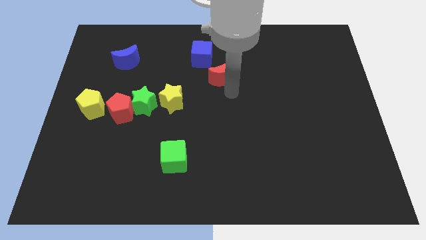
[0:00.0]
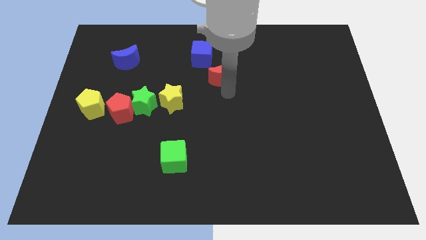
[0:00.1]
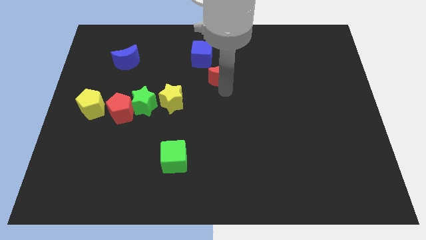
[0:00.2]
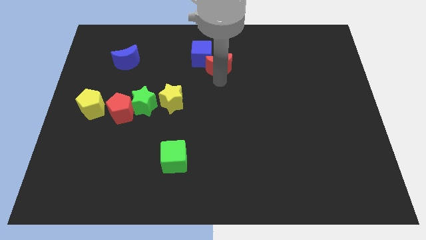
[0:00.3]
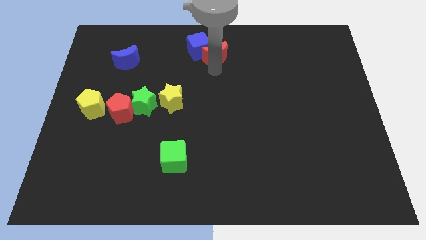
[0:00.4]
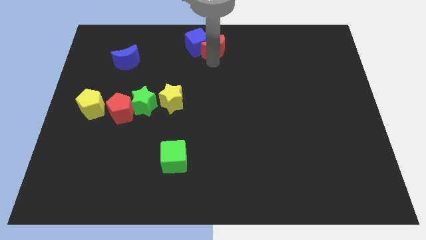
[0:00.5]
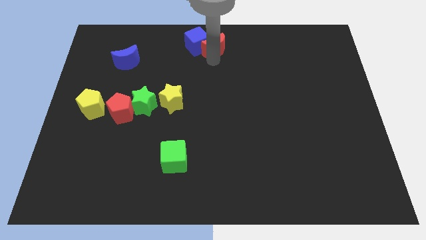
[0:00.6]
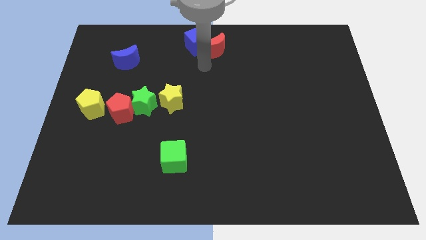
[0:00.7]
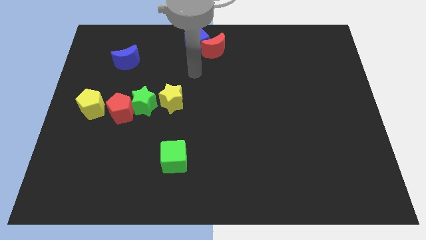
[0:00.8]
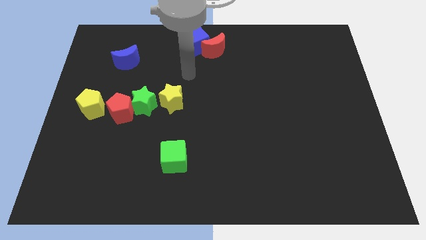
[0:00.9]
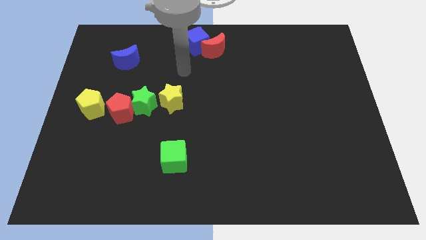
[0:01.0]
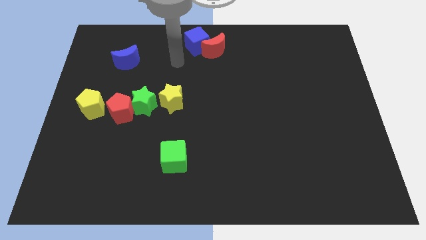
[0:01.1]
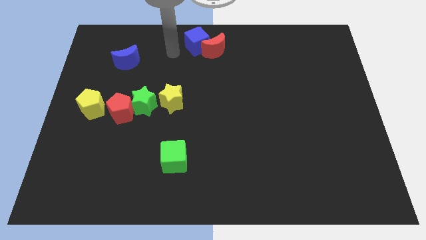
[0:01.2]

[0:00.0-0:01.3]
push red moon in to blue cube

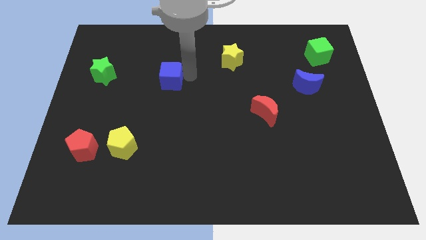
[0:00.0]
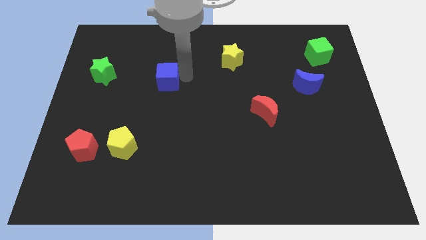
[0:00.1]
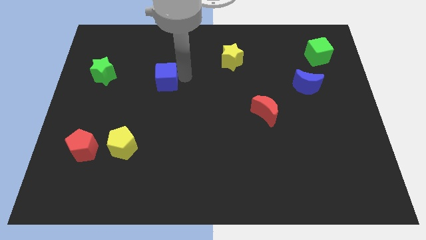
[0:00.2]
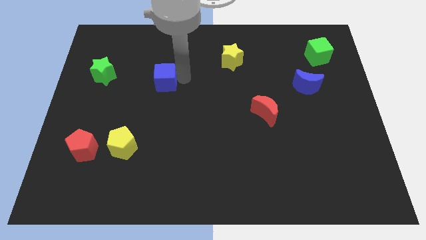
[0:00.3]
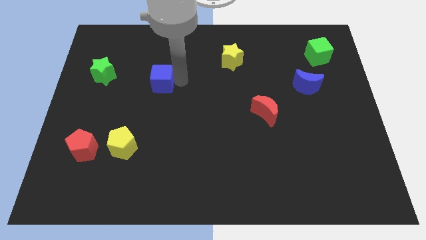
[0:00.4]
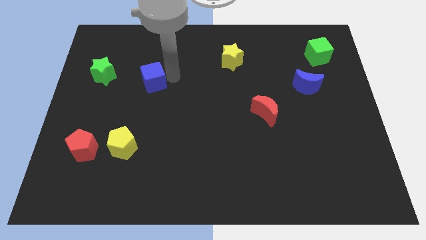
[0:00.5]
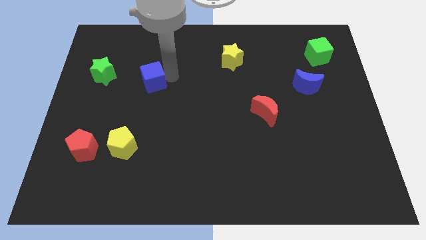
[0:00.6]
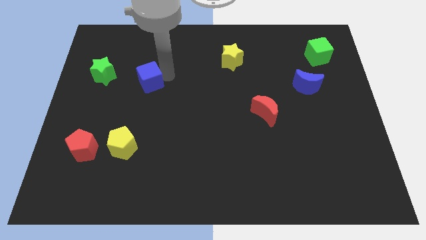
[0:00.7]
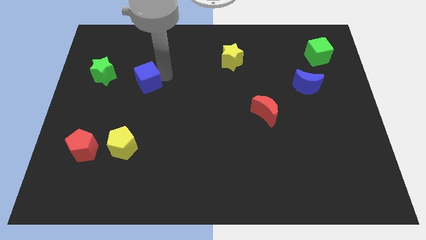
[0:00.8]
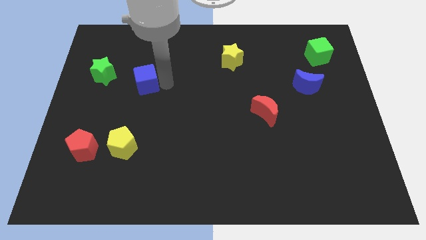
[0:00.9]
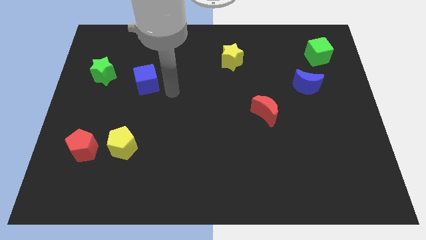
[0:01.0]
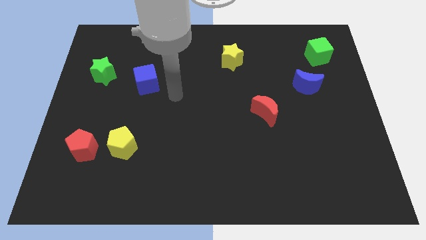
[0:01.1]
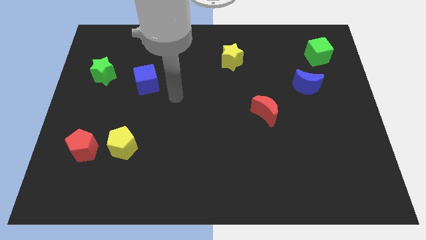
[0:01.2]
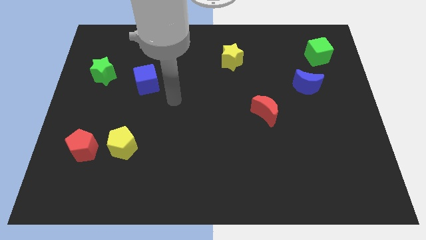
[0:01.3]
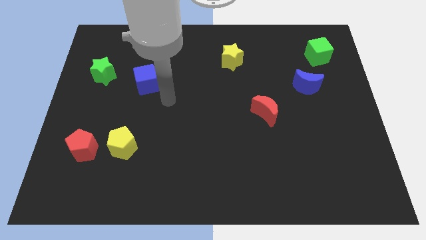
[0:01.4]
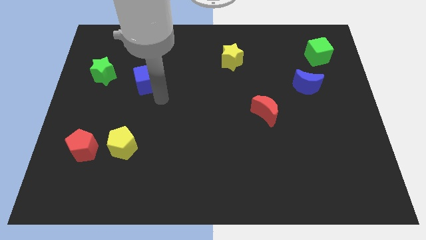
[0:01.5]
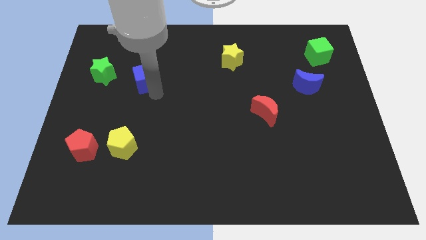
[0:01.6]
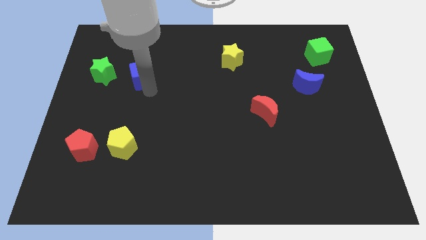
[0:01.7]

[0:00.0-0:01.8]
push the blue cube towards green star

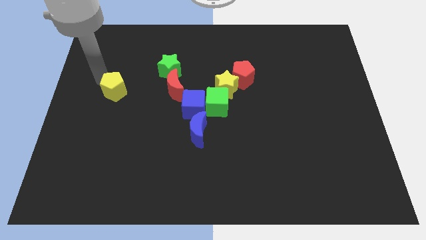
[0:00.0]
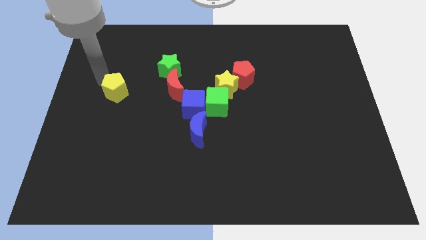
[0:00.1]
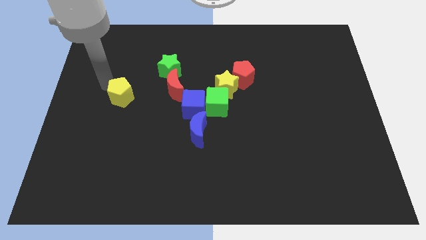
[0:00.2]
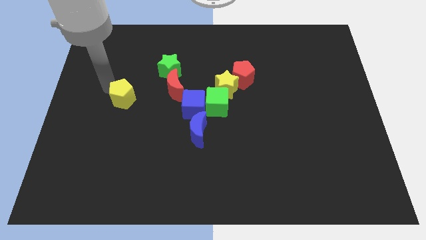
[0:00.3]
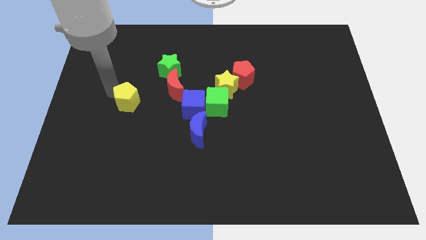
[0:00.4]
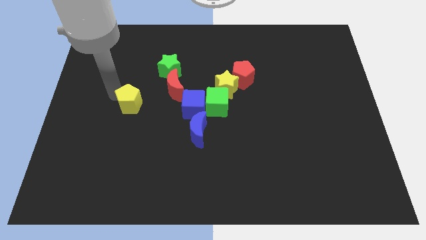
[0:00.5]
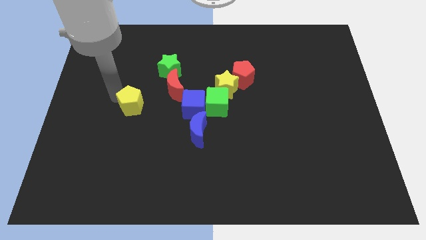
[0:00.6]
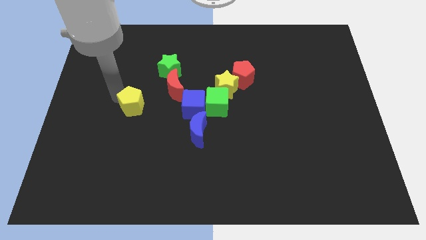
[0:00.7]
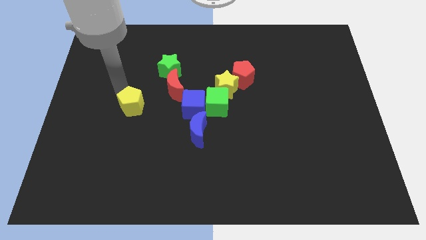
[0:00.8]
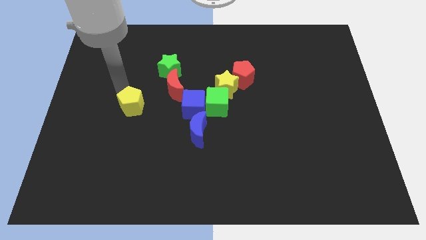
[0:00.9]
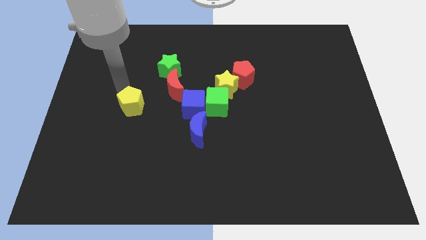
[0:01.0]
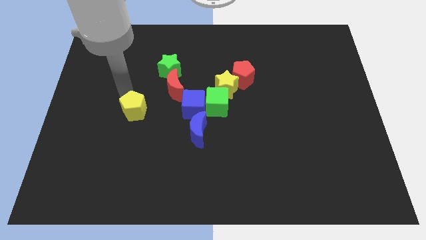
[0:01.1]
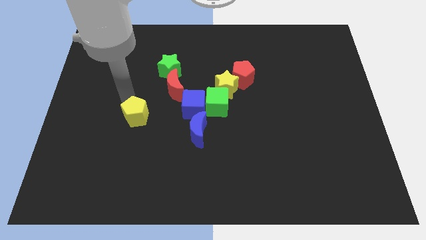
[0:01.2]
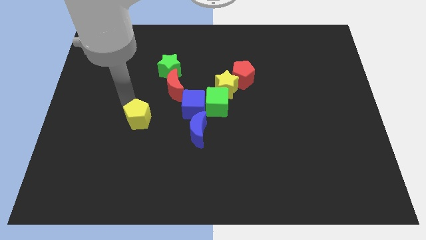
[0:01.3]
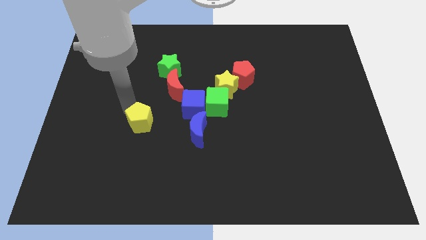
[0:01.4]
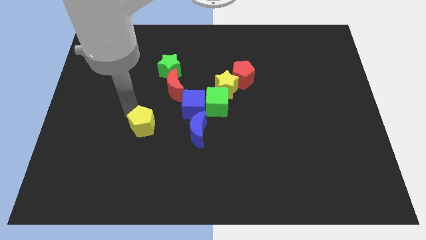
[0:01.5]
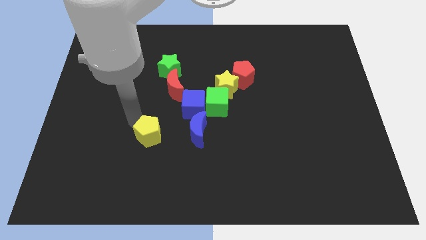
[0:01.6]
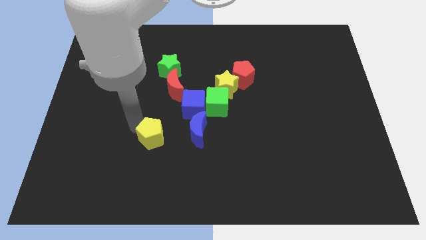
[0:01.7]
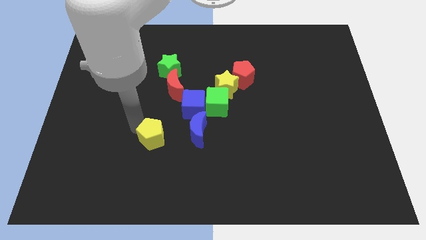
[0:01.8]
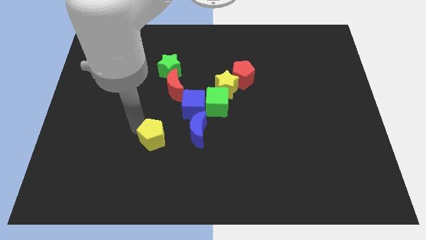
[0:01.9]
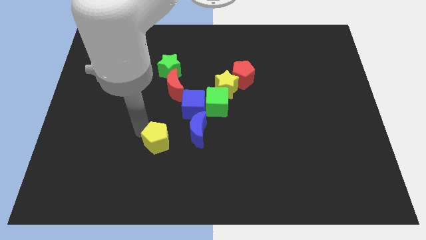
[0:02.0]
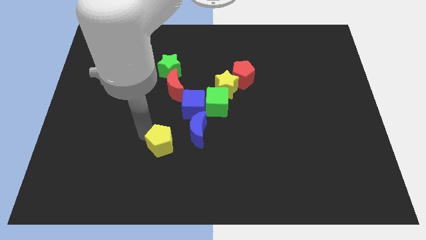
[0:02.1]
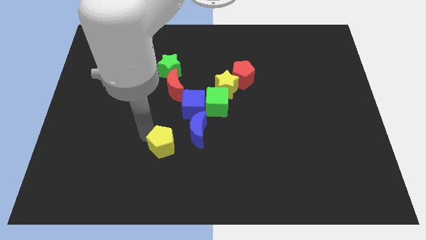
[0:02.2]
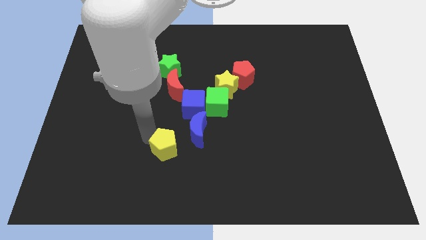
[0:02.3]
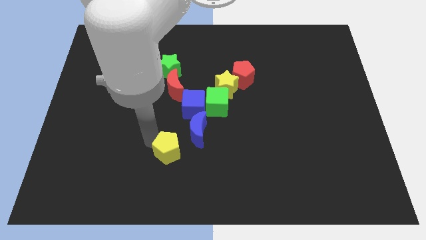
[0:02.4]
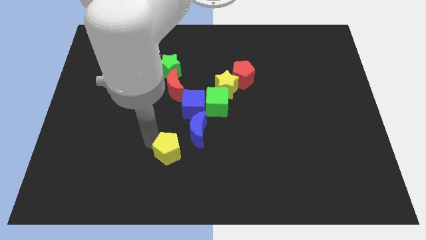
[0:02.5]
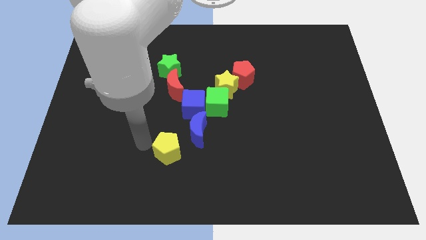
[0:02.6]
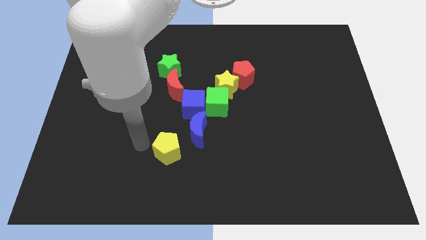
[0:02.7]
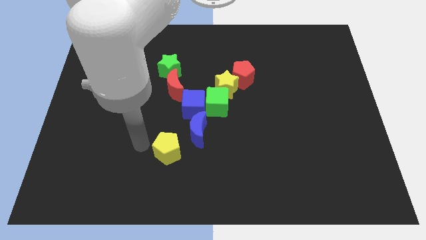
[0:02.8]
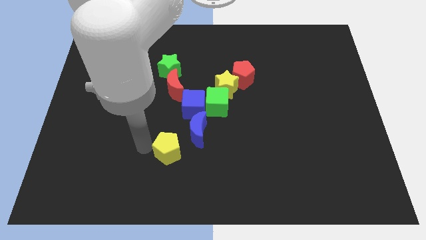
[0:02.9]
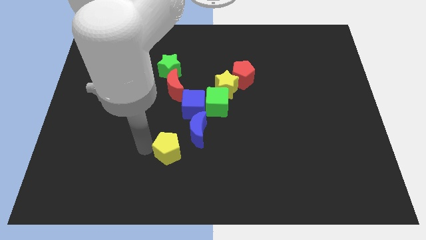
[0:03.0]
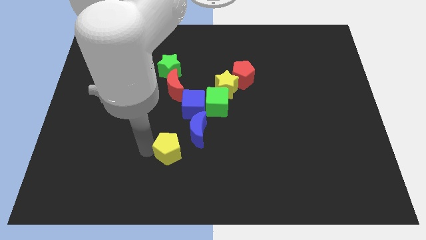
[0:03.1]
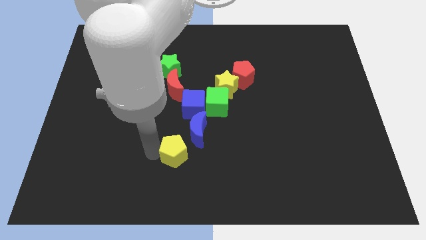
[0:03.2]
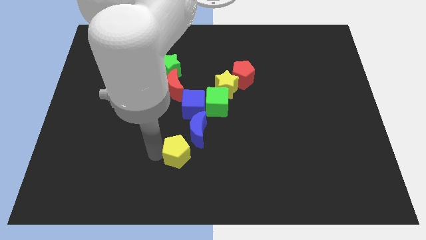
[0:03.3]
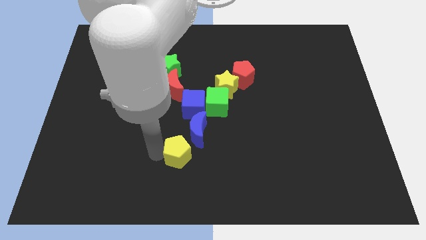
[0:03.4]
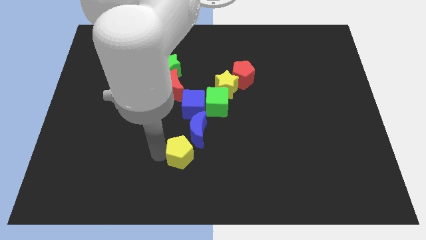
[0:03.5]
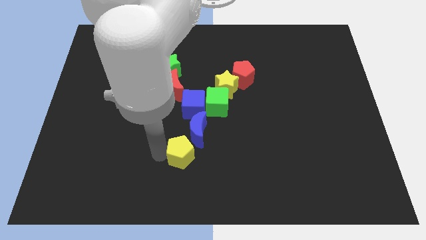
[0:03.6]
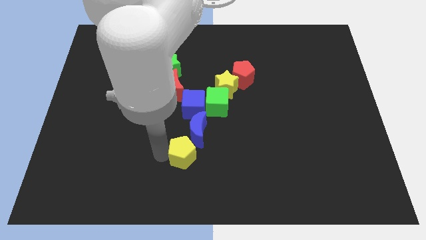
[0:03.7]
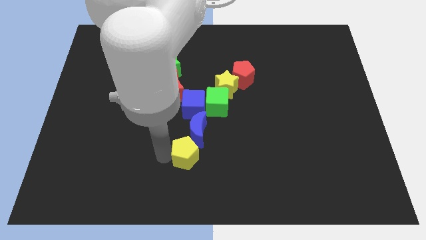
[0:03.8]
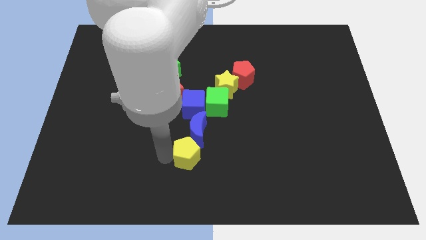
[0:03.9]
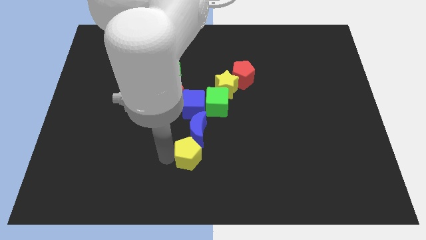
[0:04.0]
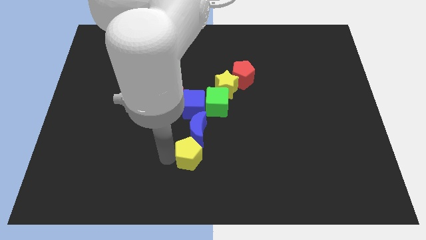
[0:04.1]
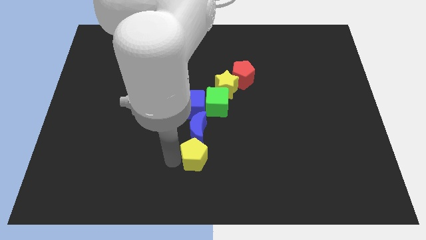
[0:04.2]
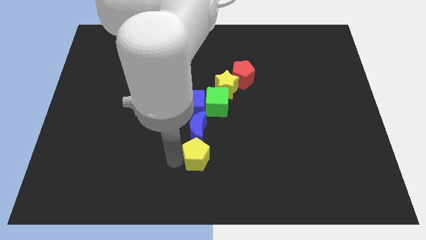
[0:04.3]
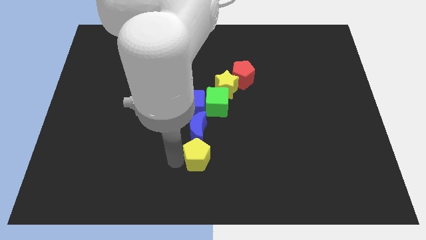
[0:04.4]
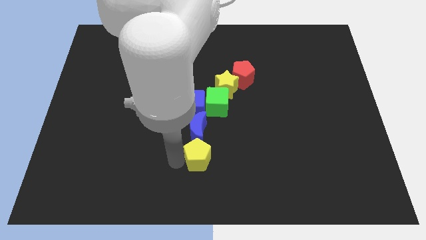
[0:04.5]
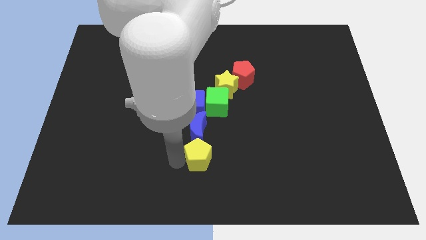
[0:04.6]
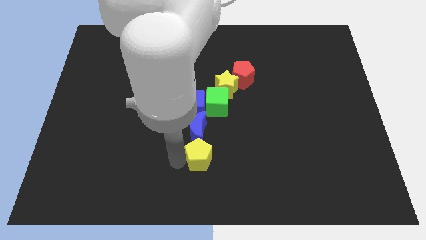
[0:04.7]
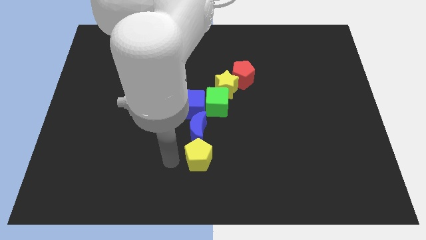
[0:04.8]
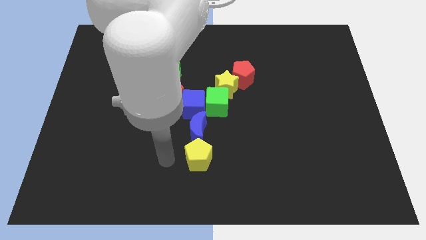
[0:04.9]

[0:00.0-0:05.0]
place the yellow pentagon at the bottom of the blue crescent to form a vertical line

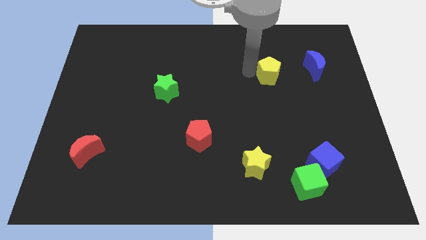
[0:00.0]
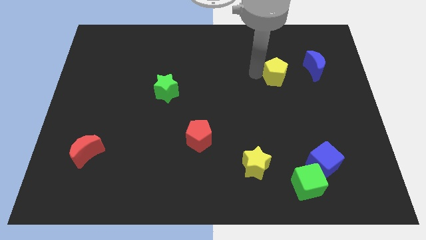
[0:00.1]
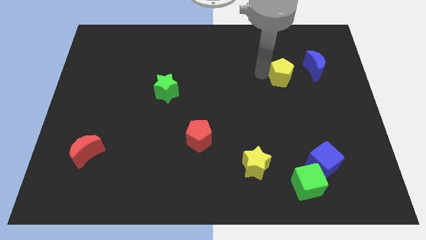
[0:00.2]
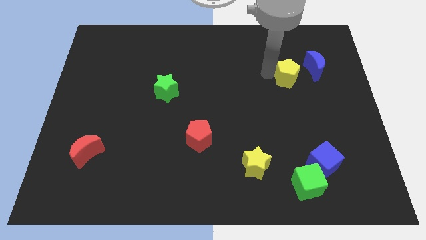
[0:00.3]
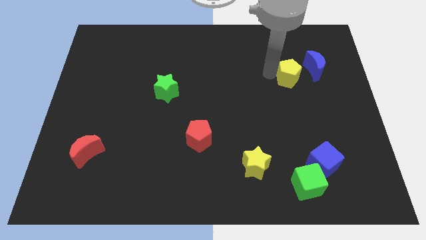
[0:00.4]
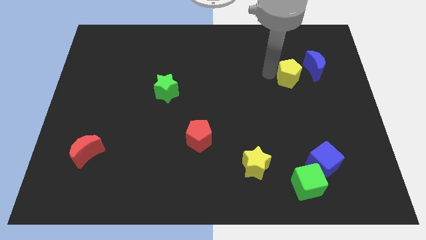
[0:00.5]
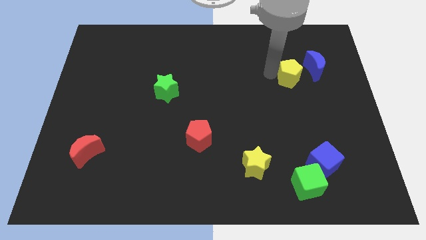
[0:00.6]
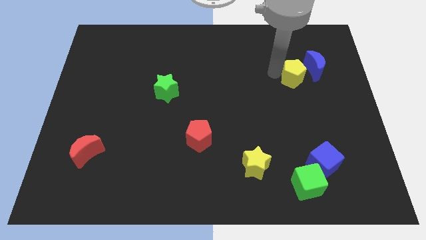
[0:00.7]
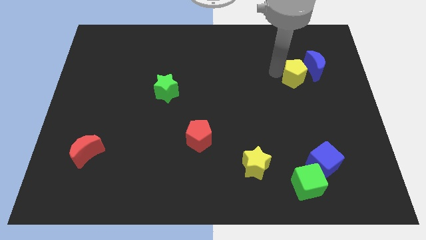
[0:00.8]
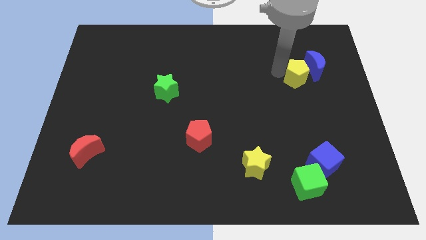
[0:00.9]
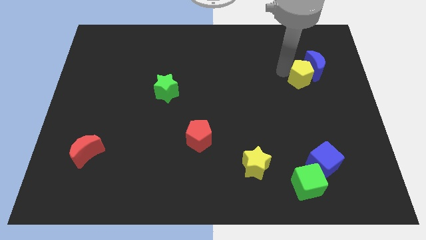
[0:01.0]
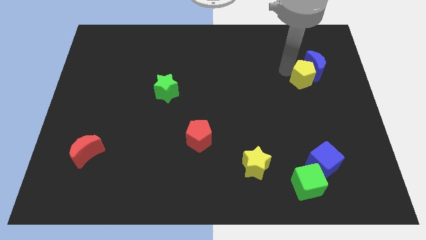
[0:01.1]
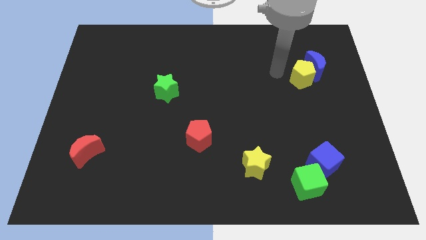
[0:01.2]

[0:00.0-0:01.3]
push the yellow pentagon towards the blue crescent
